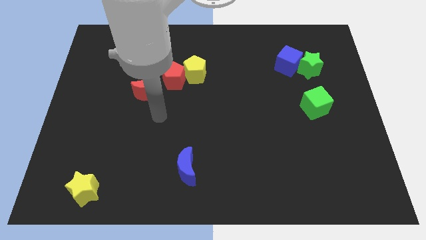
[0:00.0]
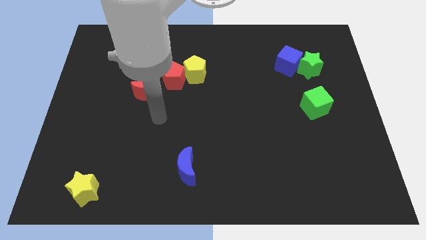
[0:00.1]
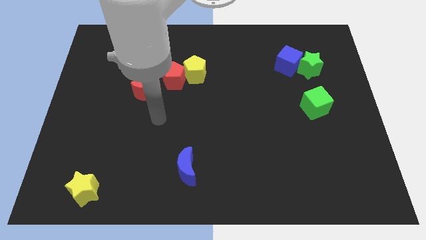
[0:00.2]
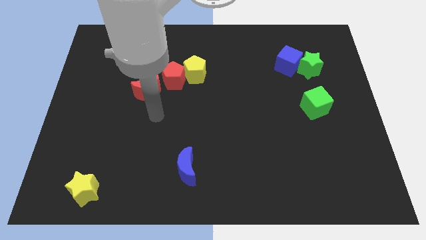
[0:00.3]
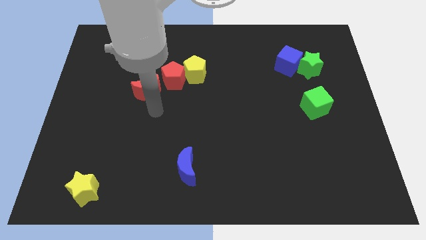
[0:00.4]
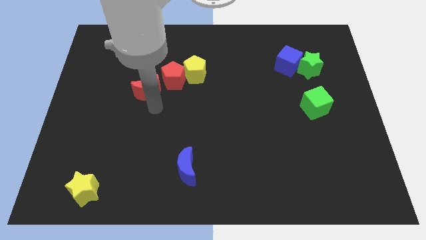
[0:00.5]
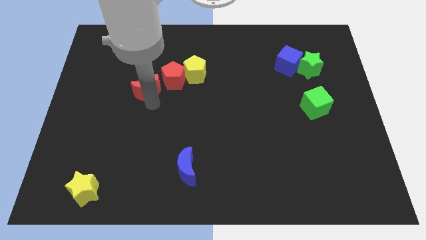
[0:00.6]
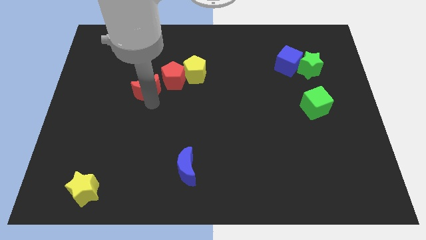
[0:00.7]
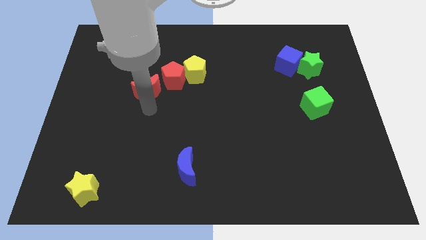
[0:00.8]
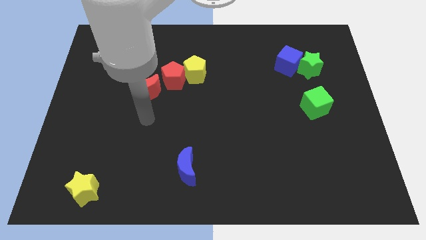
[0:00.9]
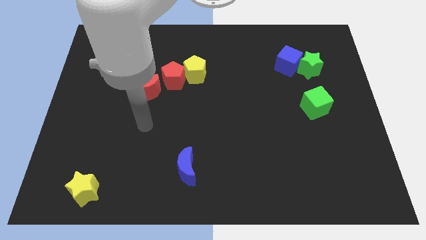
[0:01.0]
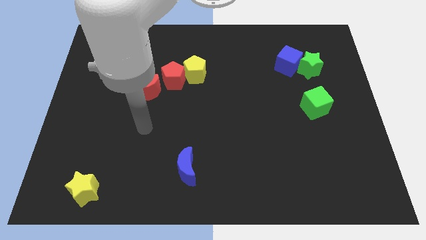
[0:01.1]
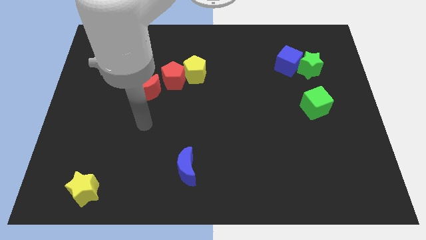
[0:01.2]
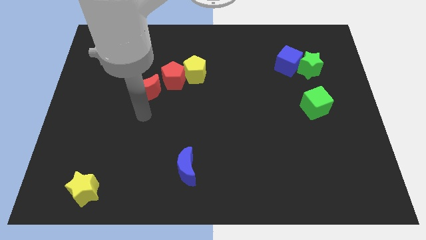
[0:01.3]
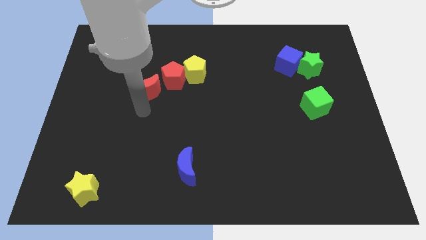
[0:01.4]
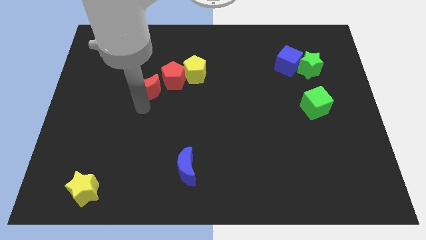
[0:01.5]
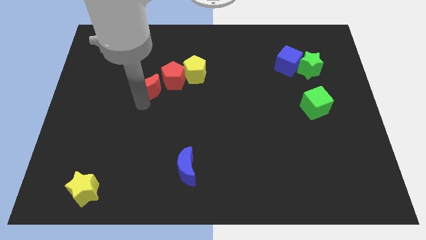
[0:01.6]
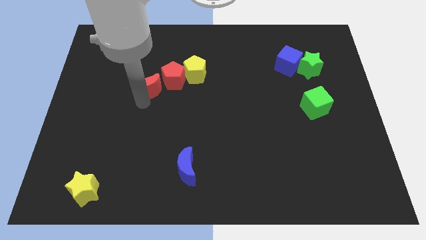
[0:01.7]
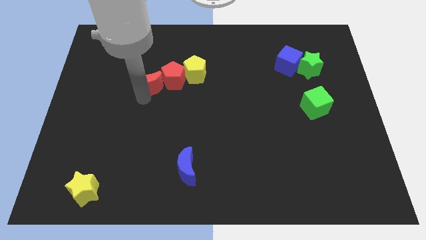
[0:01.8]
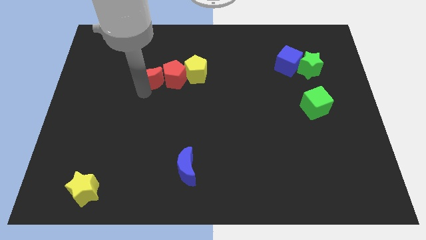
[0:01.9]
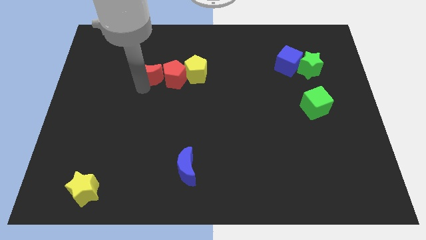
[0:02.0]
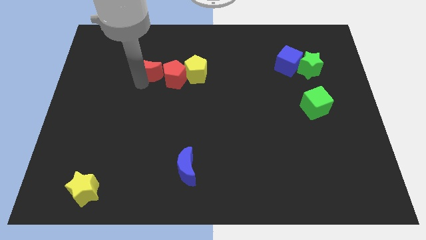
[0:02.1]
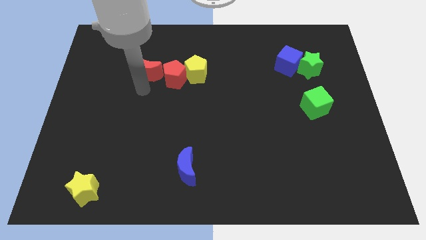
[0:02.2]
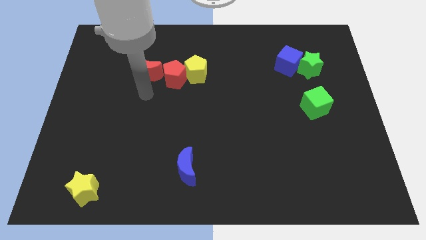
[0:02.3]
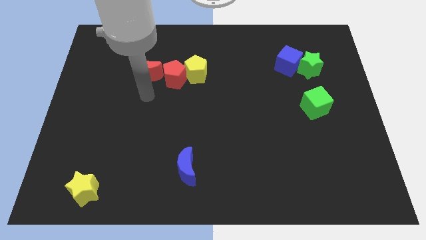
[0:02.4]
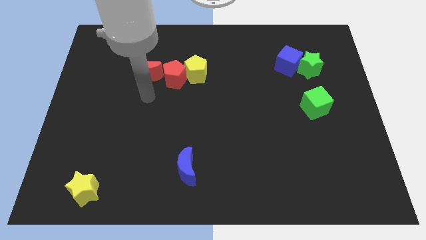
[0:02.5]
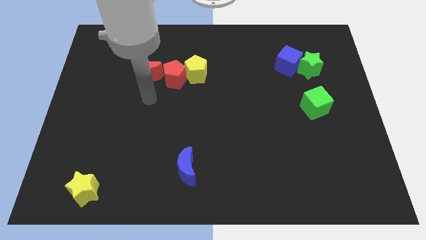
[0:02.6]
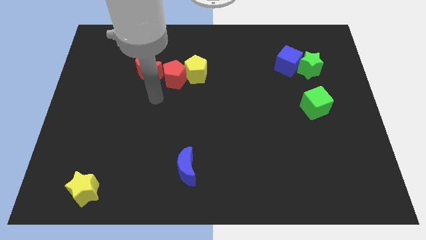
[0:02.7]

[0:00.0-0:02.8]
place the red moon to the left of the red pentagon

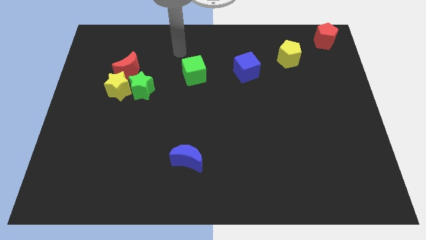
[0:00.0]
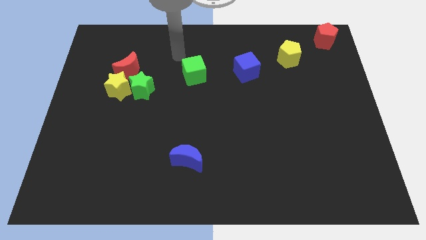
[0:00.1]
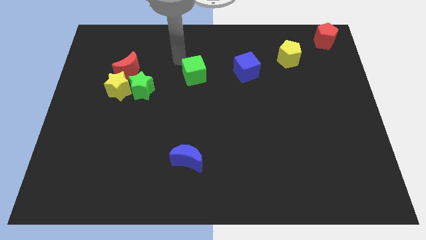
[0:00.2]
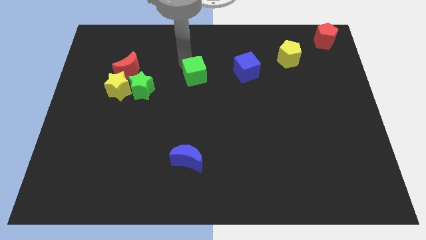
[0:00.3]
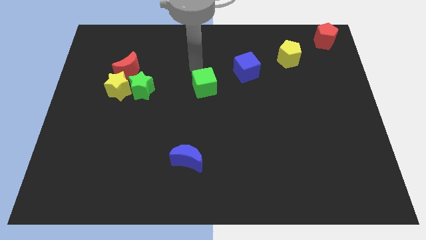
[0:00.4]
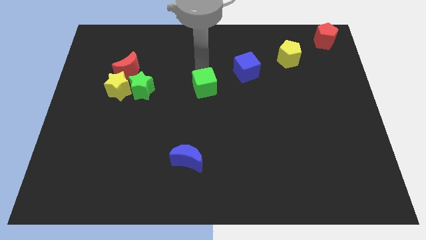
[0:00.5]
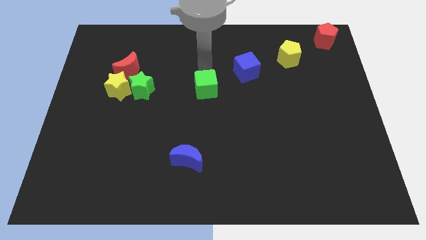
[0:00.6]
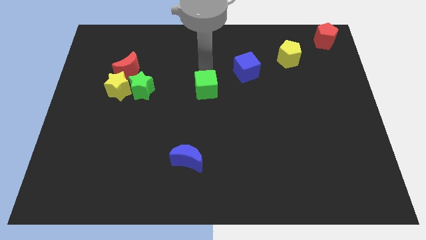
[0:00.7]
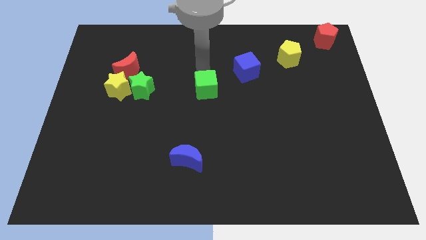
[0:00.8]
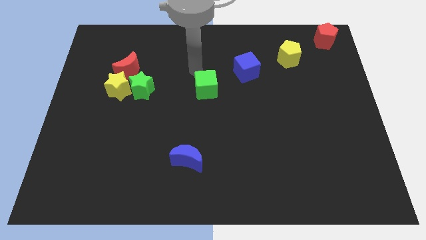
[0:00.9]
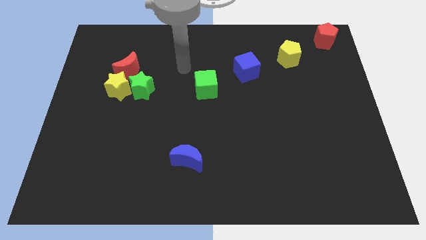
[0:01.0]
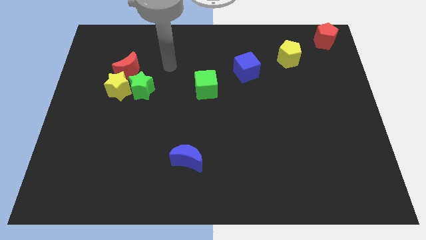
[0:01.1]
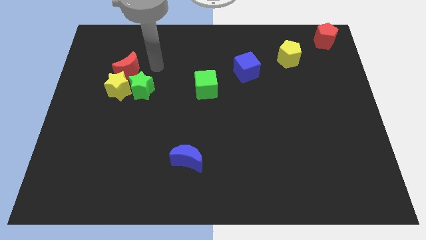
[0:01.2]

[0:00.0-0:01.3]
move green block to the center of the board

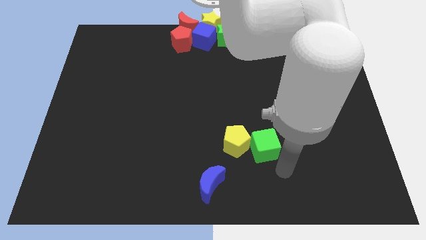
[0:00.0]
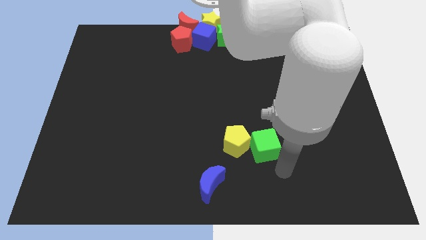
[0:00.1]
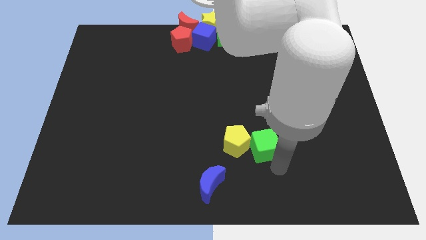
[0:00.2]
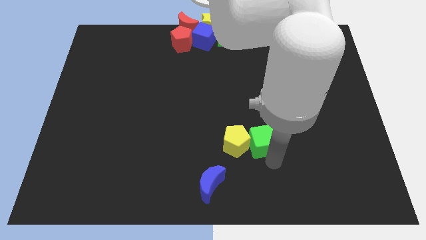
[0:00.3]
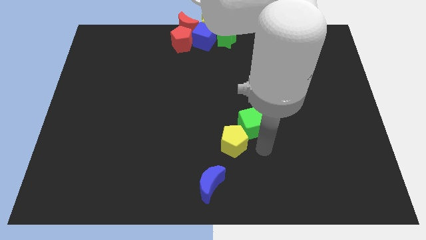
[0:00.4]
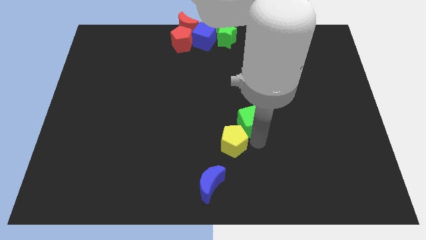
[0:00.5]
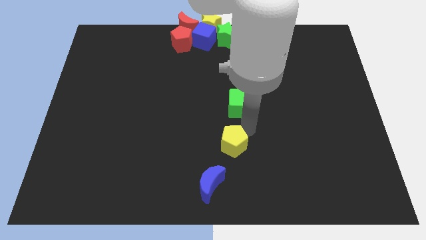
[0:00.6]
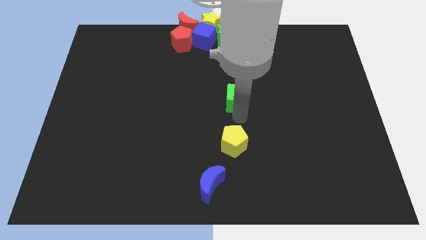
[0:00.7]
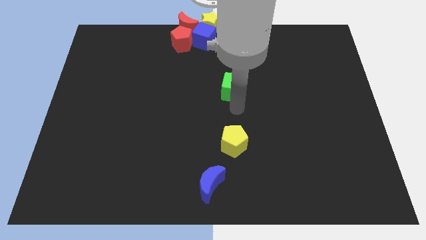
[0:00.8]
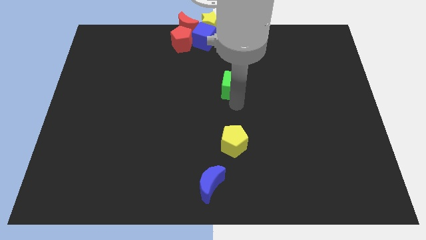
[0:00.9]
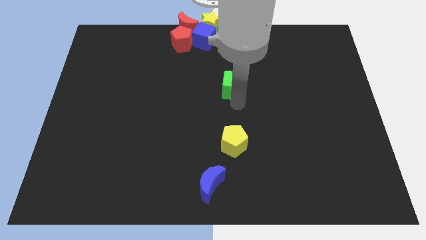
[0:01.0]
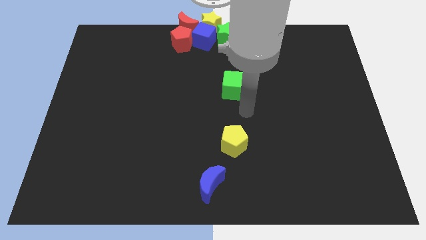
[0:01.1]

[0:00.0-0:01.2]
separate the green cube from the yellow pentagon

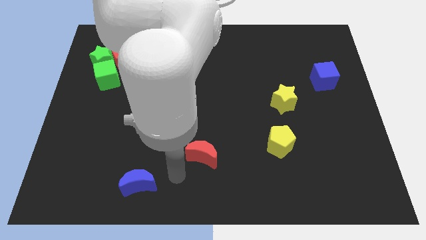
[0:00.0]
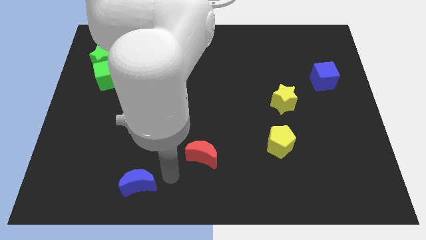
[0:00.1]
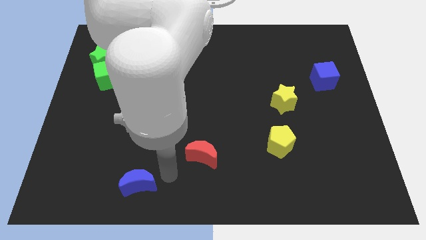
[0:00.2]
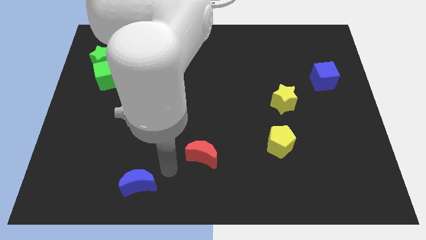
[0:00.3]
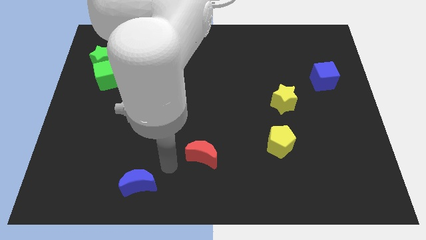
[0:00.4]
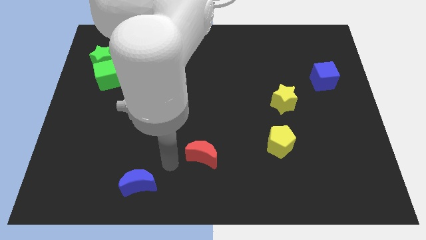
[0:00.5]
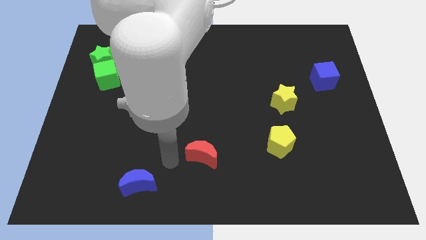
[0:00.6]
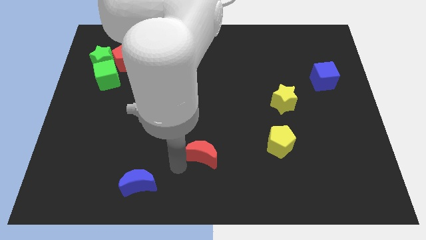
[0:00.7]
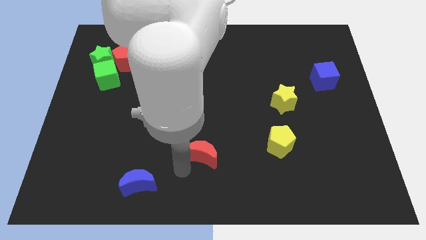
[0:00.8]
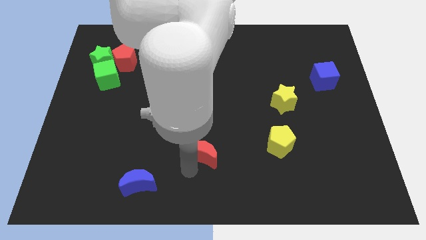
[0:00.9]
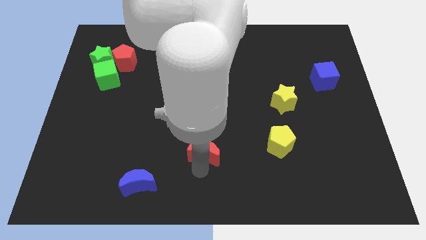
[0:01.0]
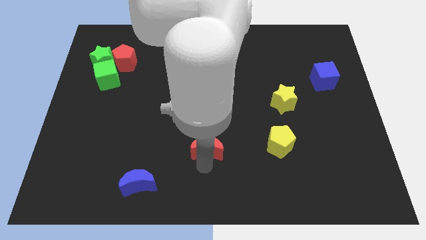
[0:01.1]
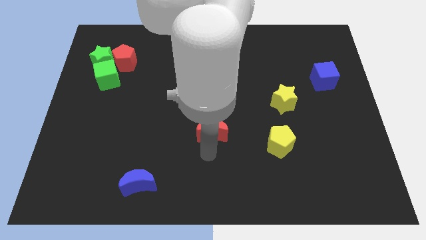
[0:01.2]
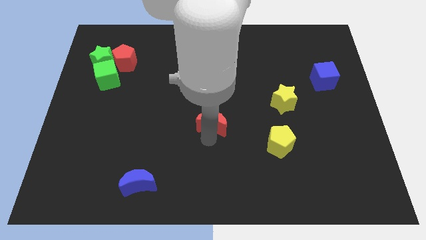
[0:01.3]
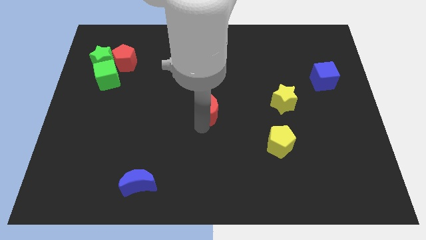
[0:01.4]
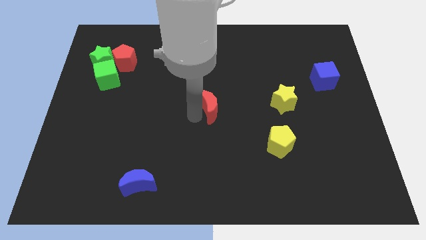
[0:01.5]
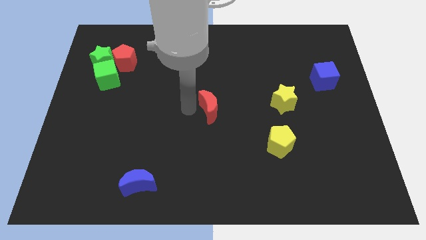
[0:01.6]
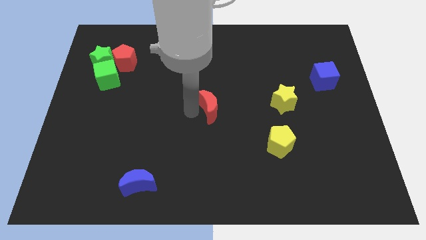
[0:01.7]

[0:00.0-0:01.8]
push the red crescent to the left of the yellow star

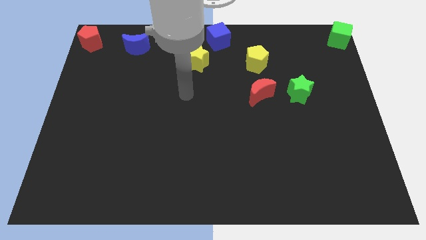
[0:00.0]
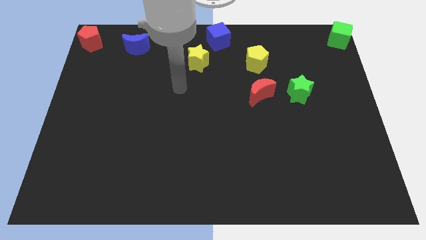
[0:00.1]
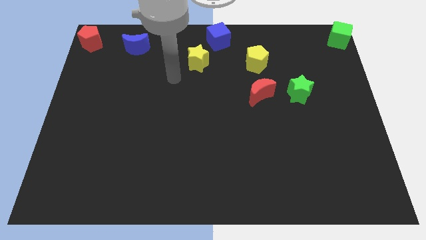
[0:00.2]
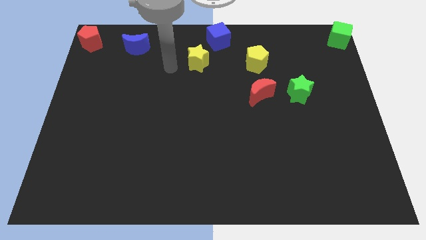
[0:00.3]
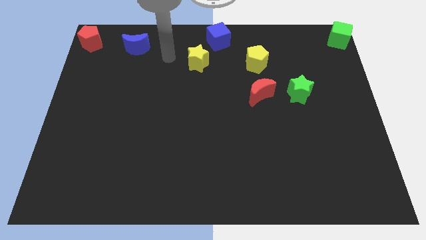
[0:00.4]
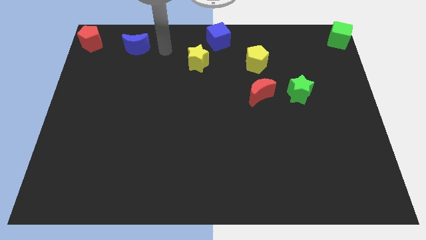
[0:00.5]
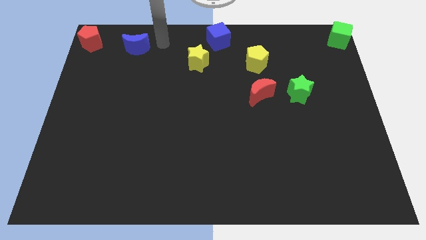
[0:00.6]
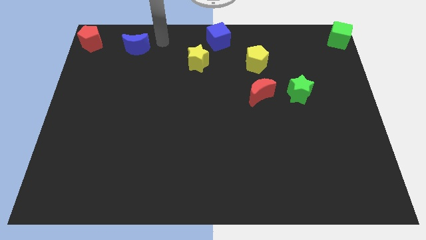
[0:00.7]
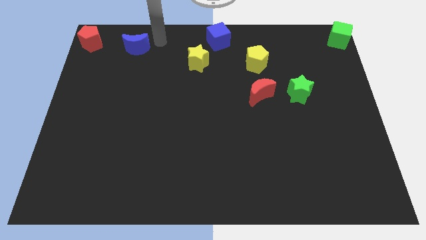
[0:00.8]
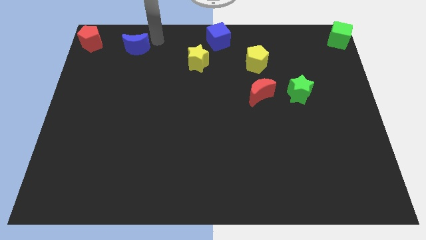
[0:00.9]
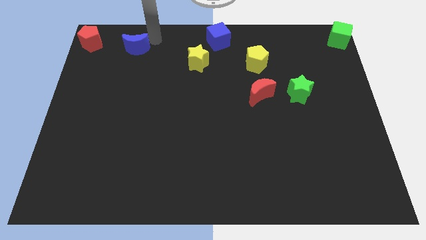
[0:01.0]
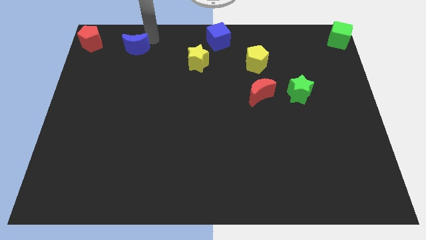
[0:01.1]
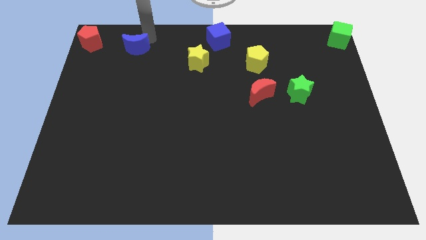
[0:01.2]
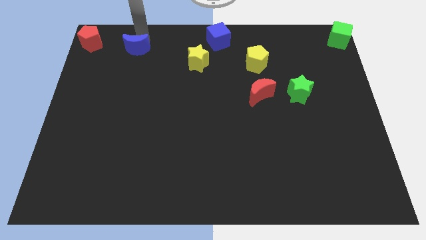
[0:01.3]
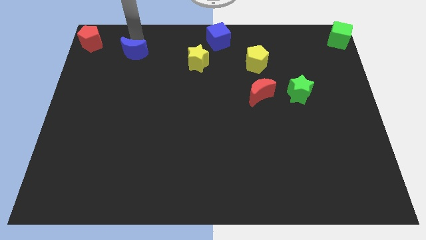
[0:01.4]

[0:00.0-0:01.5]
move the blue crescent to the bottom side

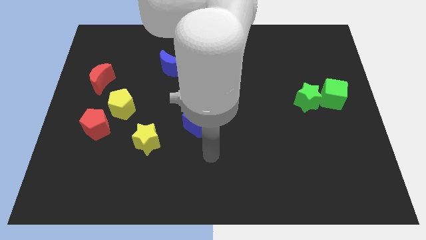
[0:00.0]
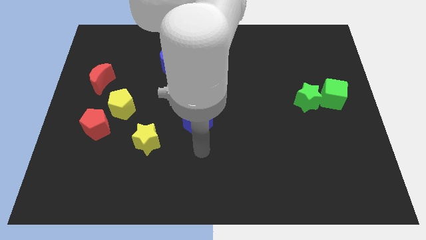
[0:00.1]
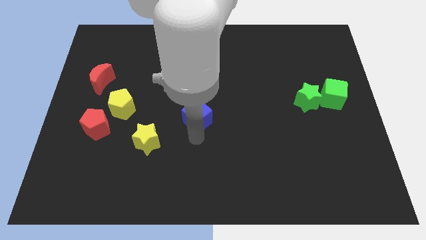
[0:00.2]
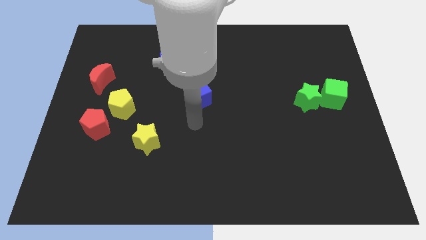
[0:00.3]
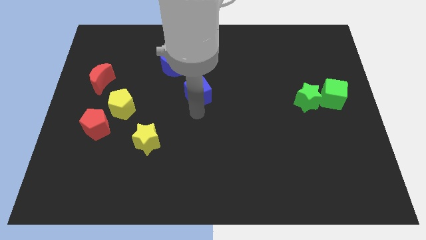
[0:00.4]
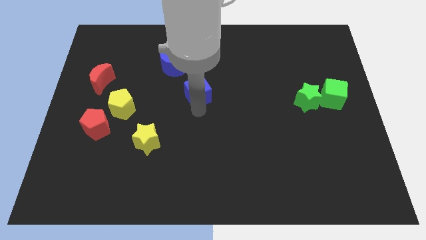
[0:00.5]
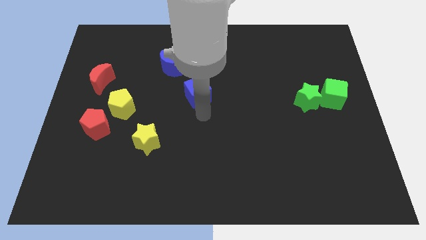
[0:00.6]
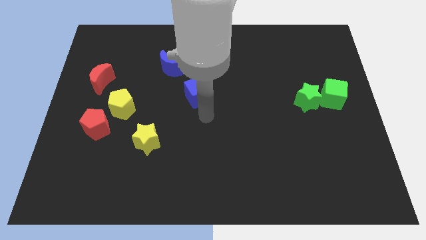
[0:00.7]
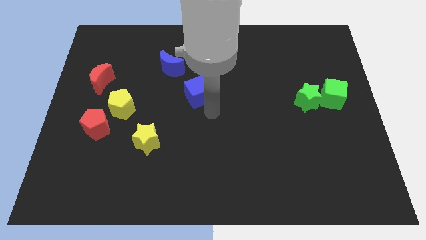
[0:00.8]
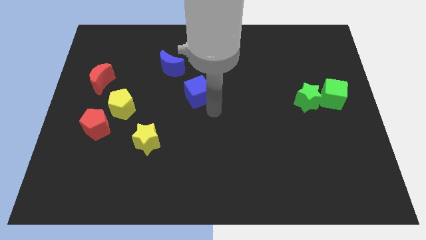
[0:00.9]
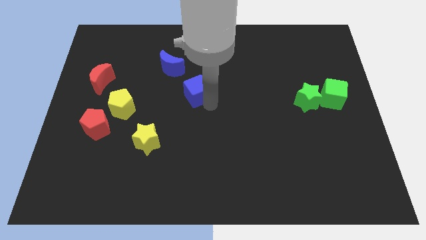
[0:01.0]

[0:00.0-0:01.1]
push blue cube bottom right to the blue moon
